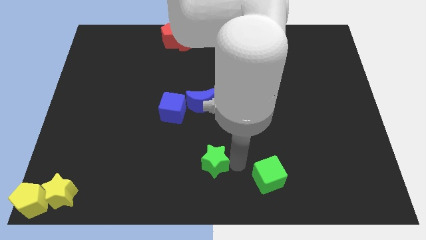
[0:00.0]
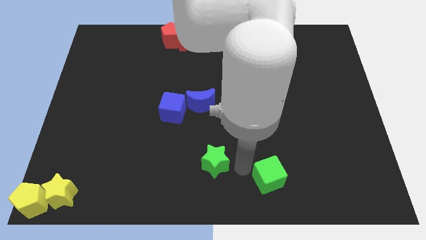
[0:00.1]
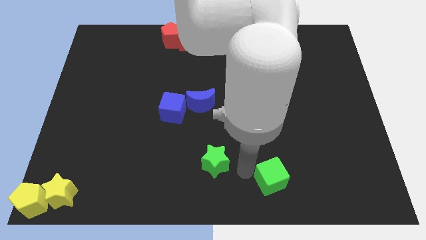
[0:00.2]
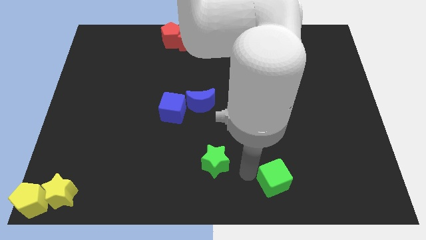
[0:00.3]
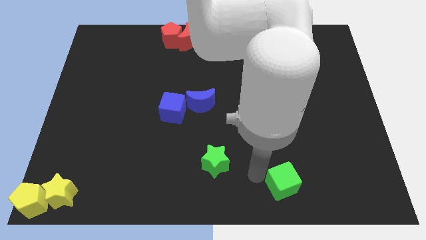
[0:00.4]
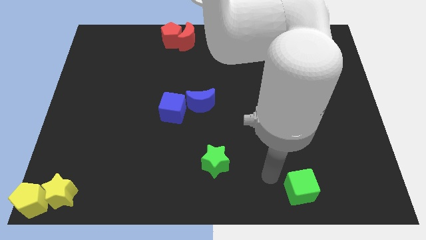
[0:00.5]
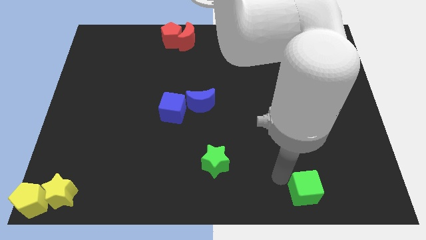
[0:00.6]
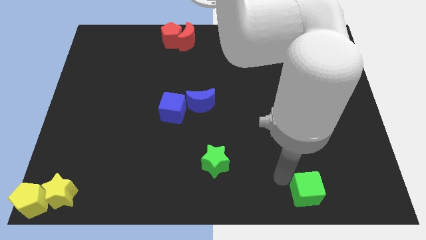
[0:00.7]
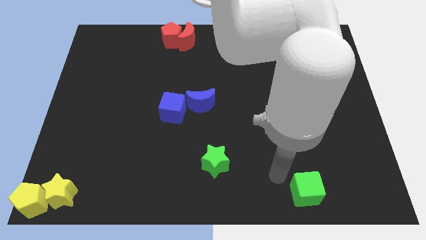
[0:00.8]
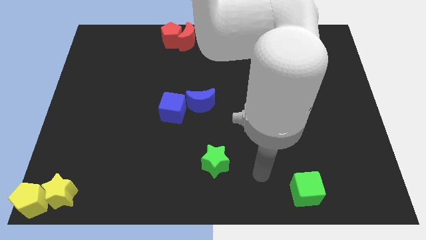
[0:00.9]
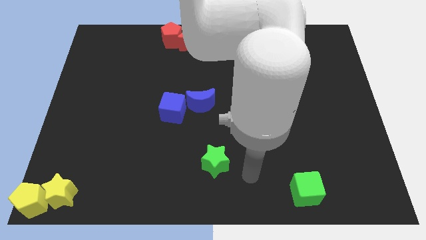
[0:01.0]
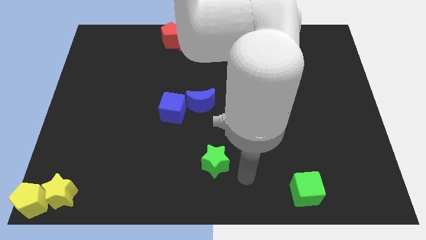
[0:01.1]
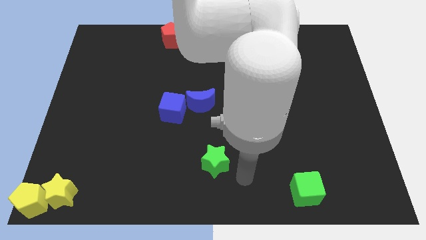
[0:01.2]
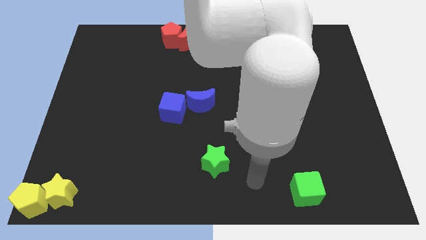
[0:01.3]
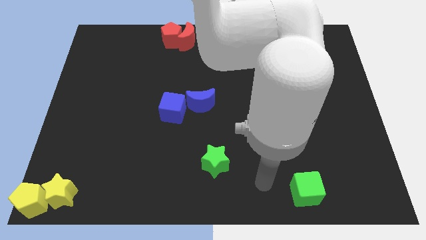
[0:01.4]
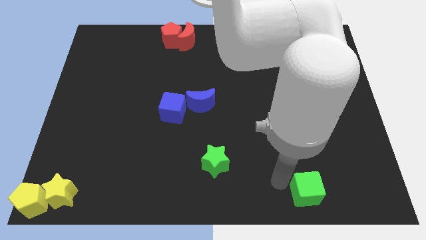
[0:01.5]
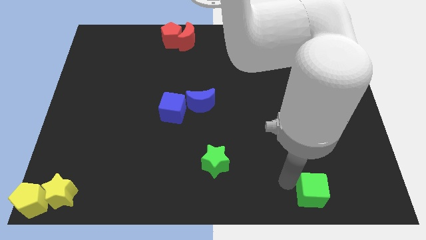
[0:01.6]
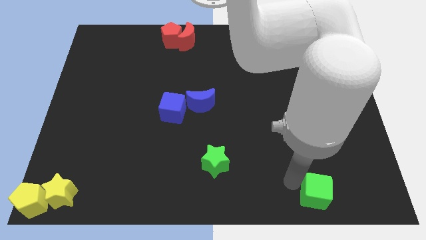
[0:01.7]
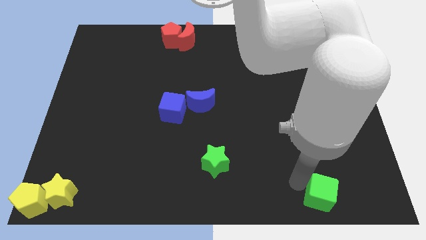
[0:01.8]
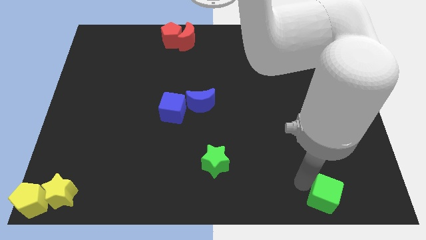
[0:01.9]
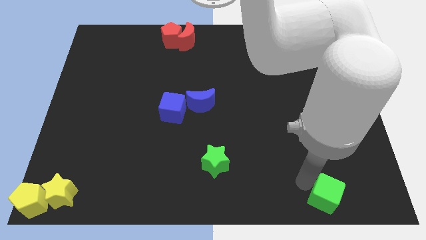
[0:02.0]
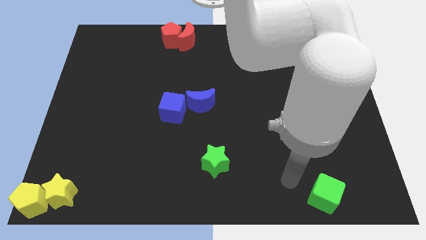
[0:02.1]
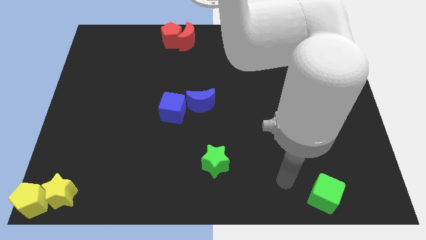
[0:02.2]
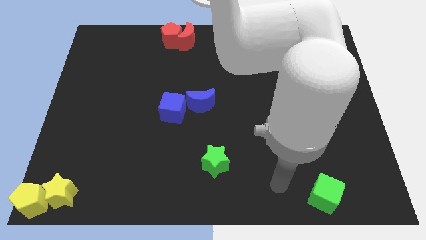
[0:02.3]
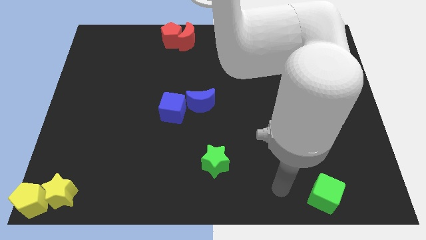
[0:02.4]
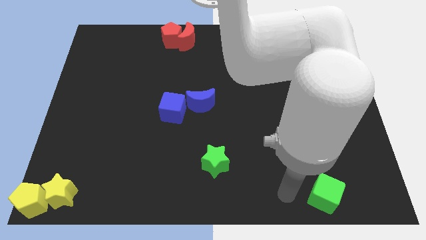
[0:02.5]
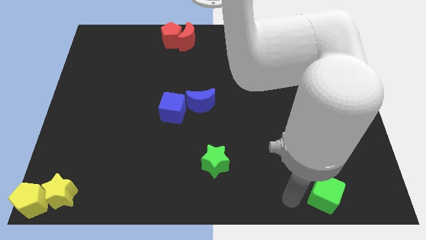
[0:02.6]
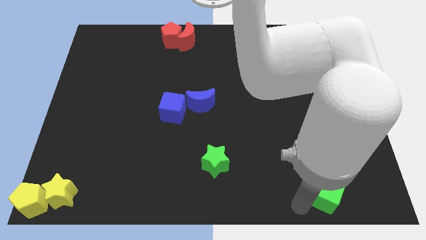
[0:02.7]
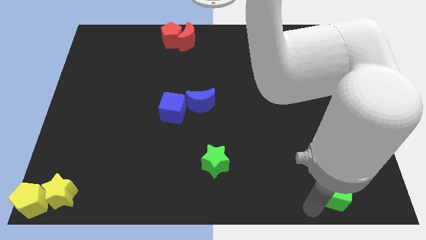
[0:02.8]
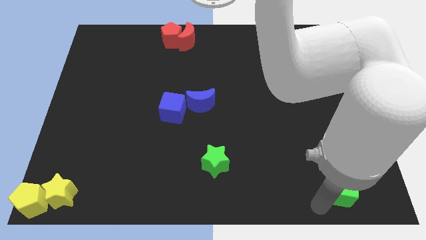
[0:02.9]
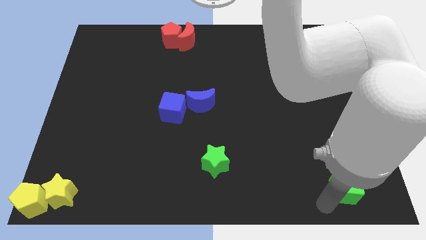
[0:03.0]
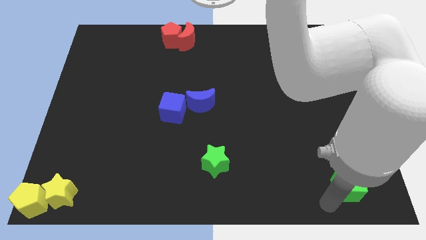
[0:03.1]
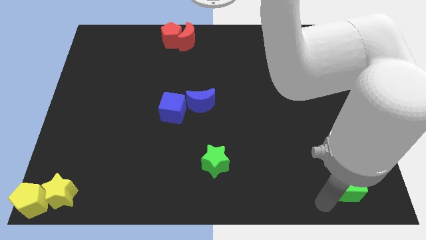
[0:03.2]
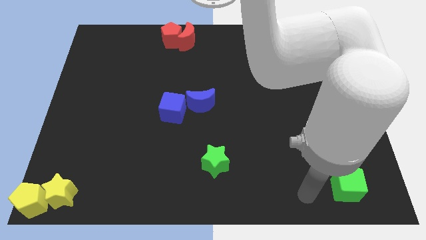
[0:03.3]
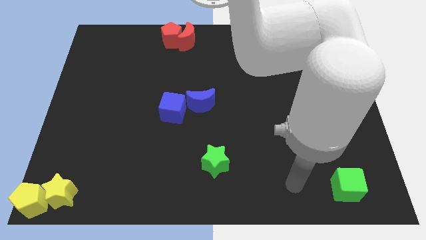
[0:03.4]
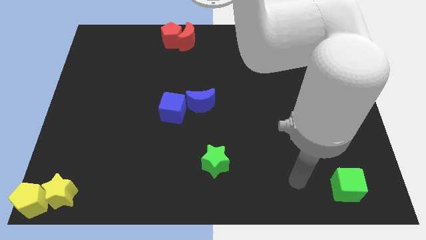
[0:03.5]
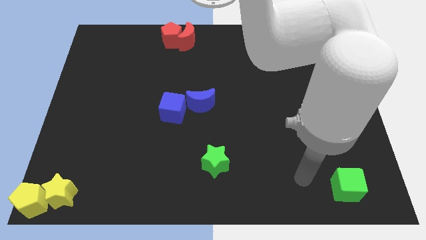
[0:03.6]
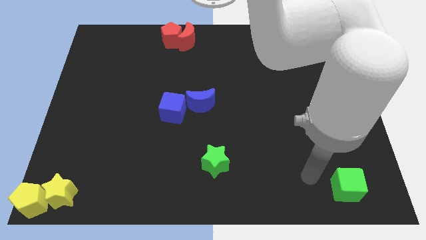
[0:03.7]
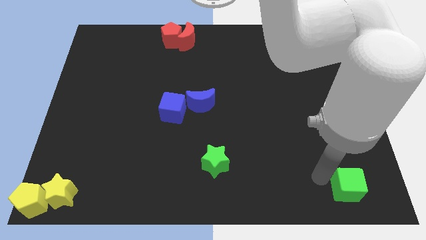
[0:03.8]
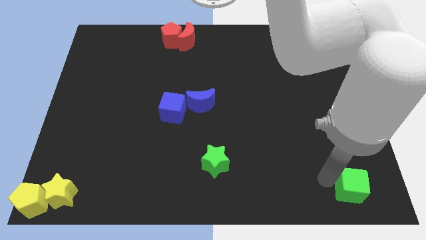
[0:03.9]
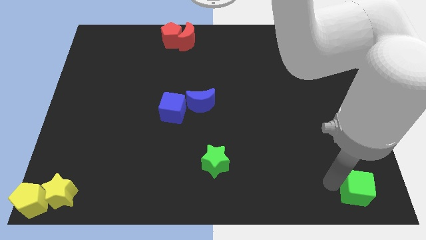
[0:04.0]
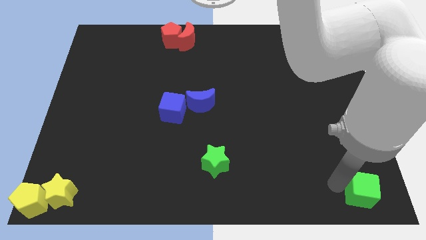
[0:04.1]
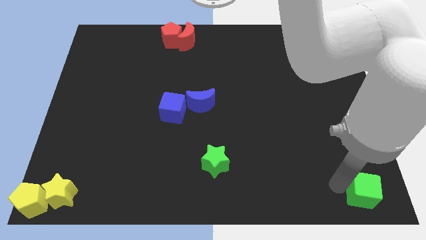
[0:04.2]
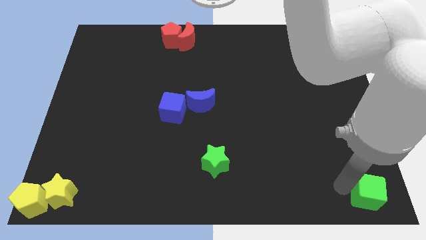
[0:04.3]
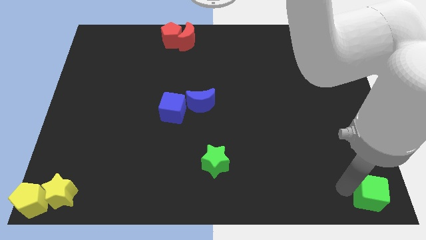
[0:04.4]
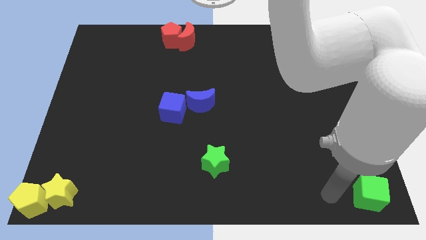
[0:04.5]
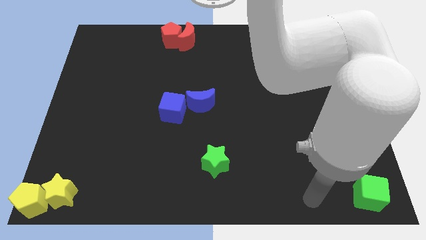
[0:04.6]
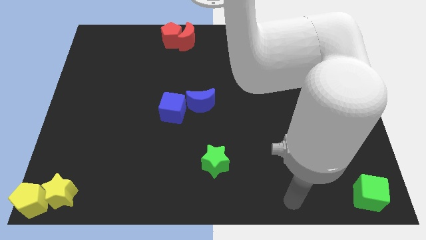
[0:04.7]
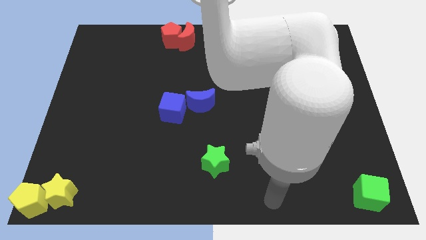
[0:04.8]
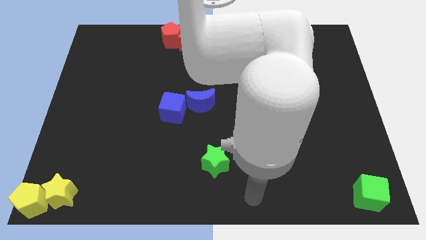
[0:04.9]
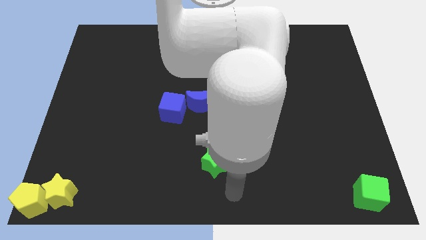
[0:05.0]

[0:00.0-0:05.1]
push the green cube to the bottom right corner

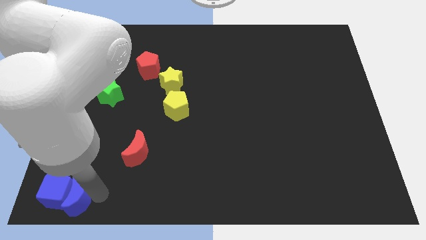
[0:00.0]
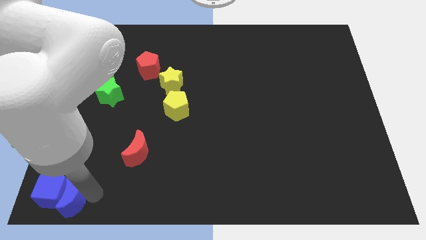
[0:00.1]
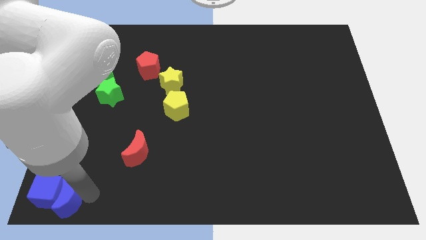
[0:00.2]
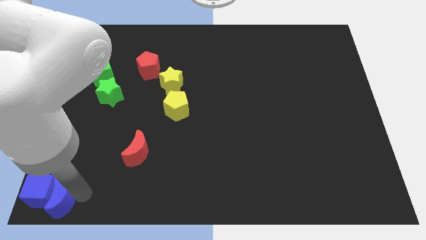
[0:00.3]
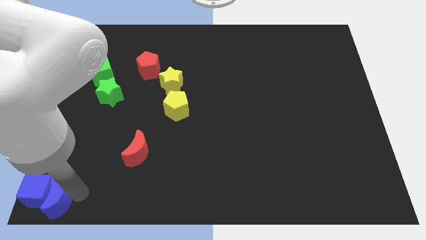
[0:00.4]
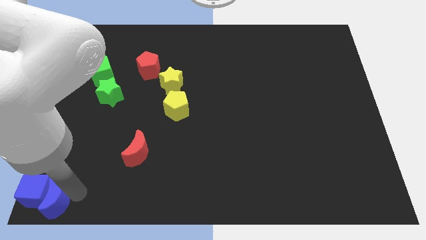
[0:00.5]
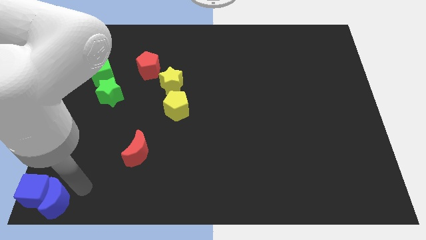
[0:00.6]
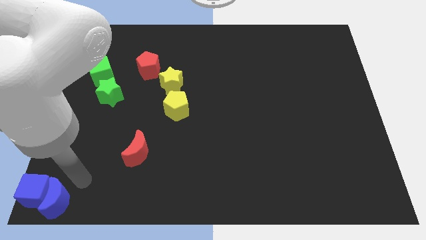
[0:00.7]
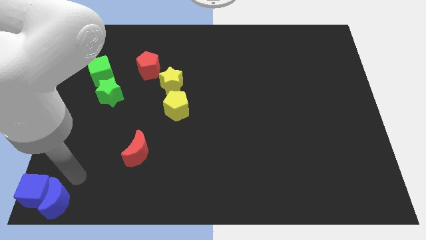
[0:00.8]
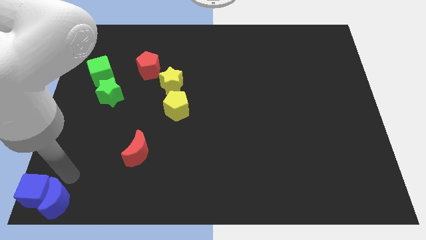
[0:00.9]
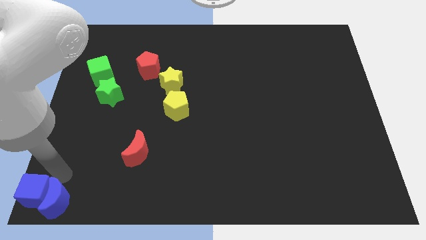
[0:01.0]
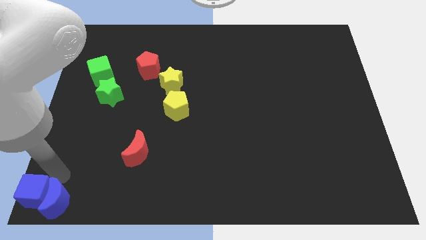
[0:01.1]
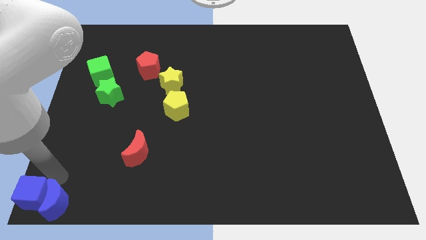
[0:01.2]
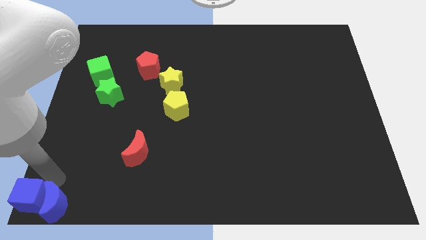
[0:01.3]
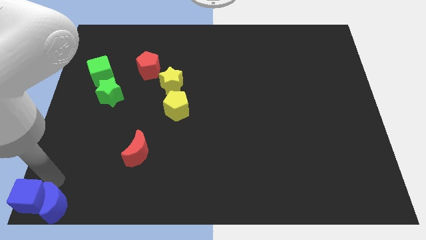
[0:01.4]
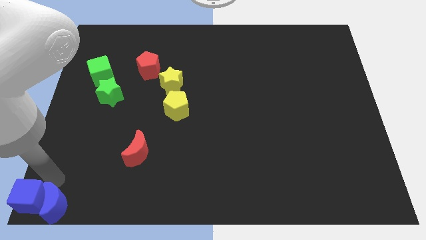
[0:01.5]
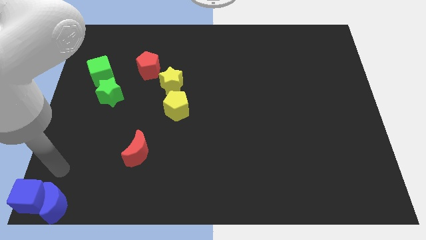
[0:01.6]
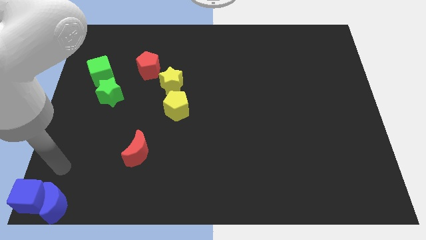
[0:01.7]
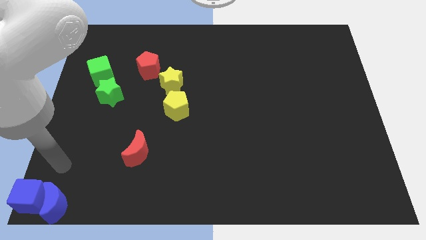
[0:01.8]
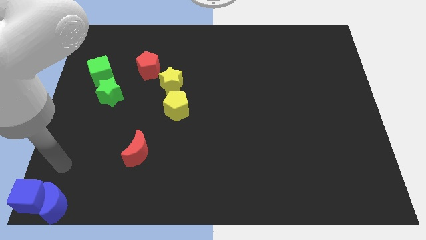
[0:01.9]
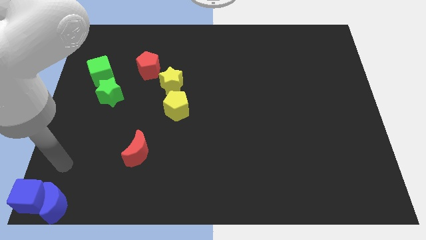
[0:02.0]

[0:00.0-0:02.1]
place both the blue blocks at the bottom left side of the board

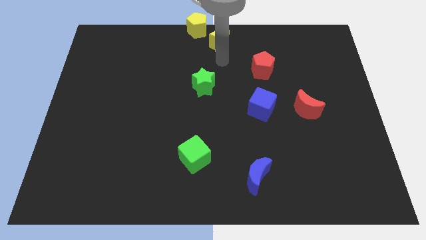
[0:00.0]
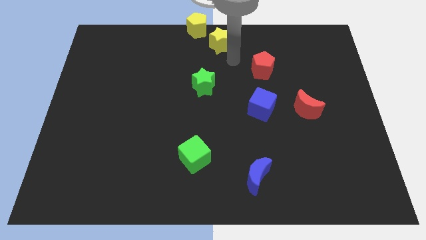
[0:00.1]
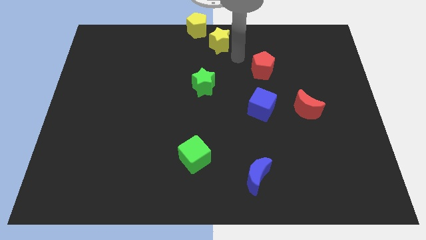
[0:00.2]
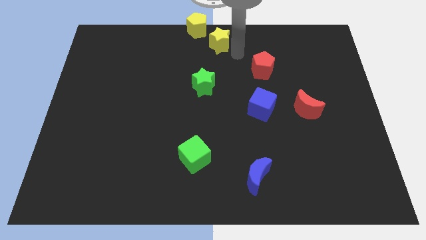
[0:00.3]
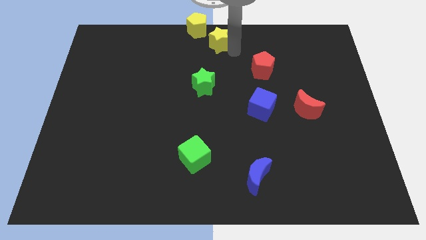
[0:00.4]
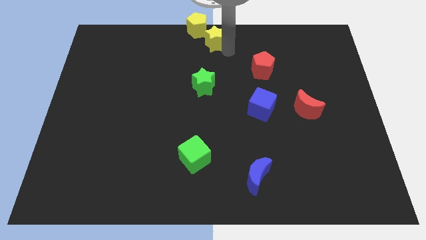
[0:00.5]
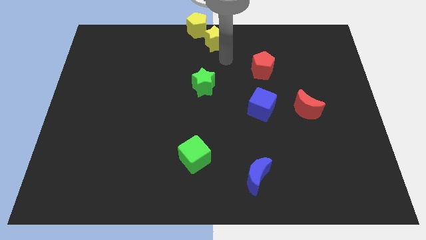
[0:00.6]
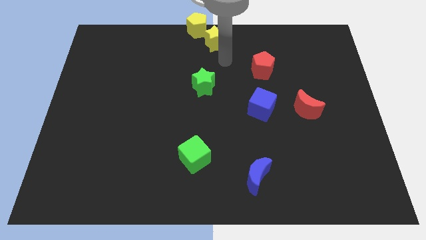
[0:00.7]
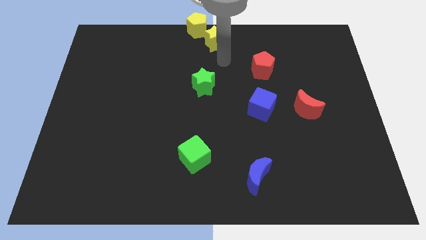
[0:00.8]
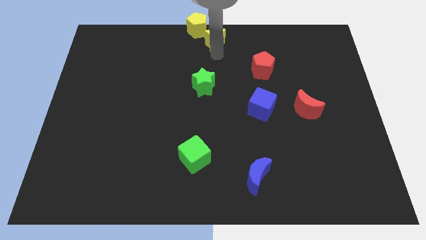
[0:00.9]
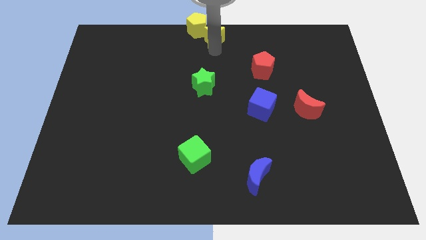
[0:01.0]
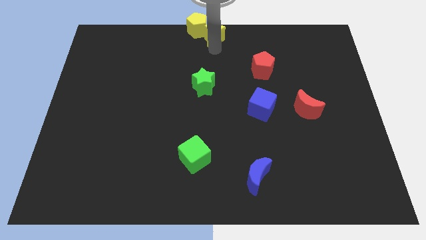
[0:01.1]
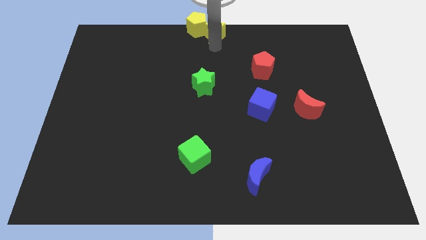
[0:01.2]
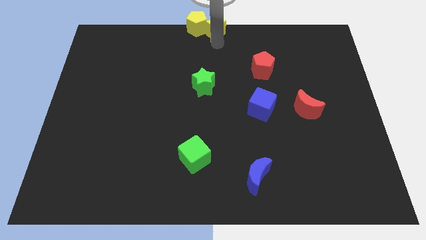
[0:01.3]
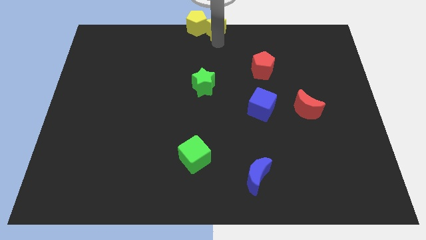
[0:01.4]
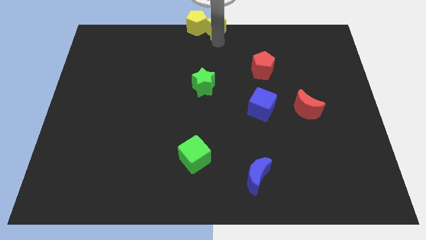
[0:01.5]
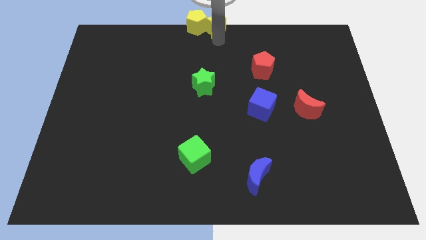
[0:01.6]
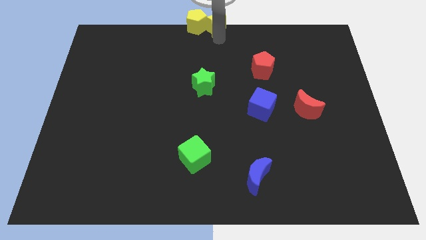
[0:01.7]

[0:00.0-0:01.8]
move the yellow star right to the yellow pentagon
